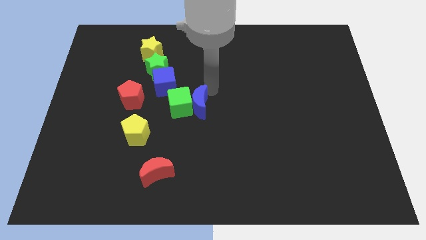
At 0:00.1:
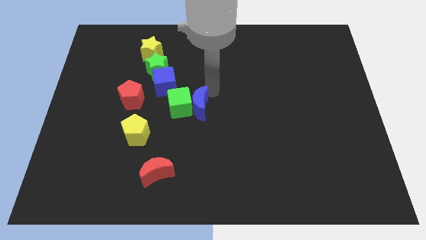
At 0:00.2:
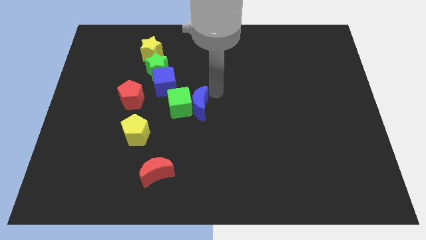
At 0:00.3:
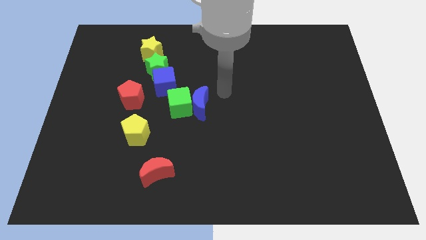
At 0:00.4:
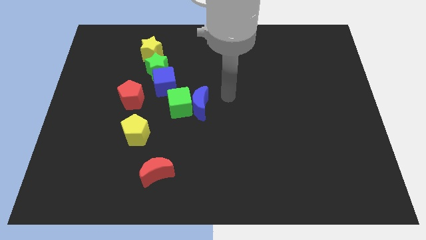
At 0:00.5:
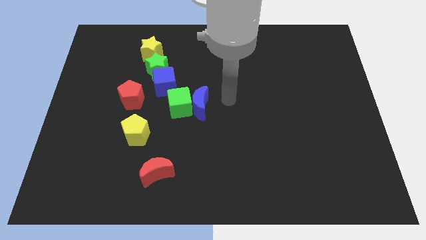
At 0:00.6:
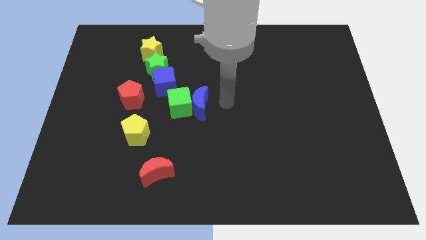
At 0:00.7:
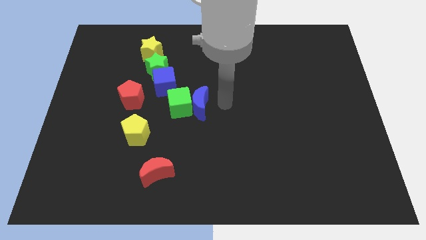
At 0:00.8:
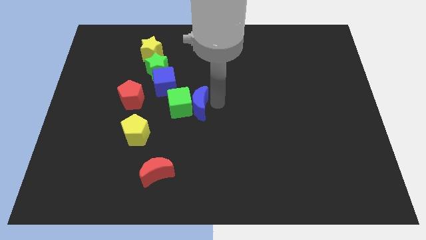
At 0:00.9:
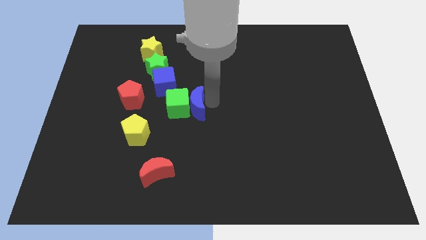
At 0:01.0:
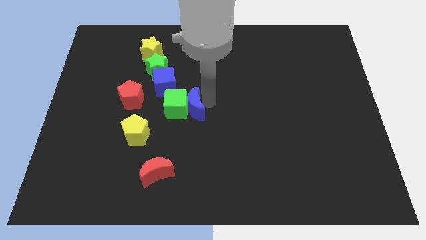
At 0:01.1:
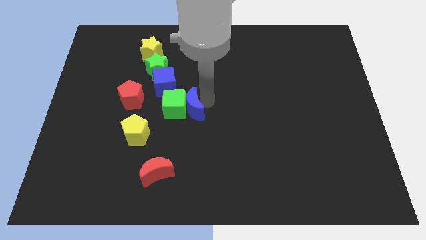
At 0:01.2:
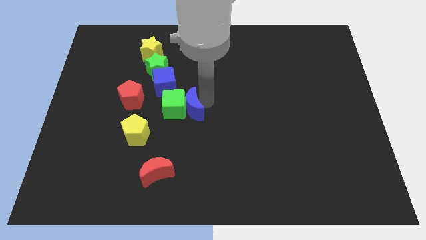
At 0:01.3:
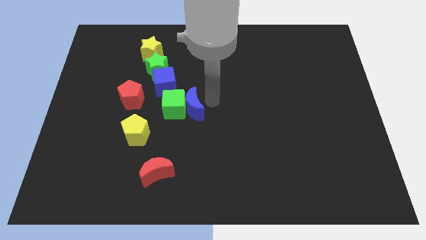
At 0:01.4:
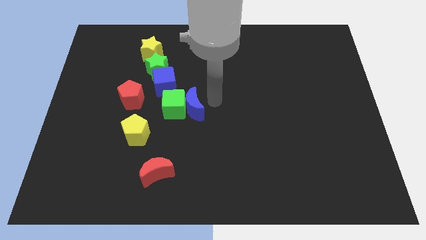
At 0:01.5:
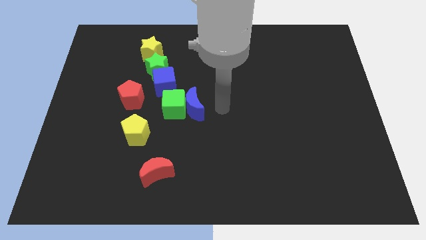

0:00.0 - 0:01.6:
move the blue moon and the green cube slightly to the left

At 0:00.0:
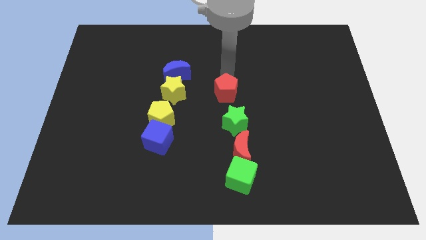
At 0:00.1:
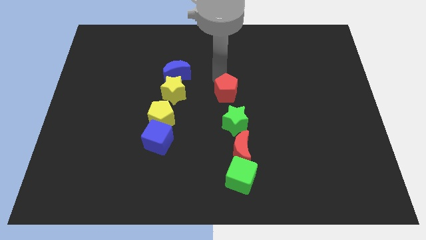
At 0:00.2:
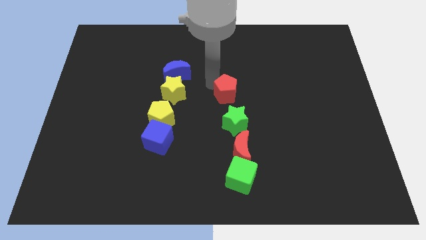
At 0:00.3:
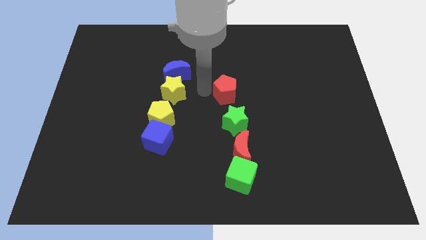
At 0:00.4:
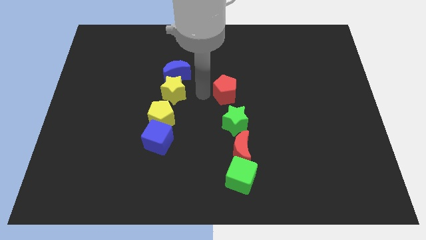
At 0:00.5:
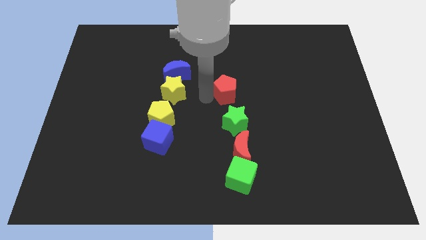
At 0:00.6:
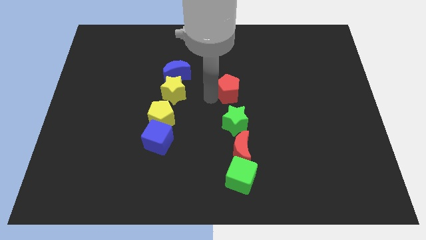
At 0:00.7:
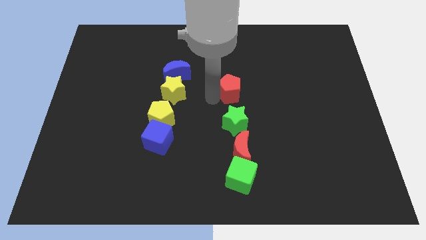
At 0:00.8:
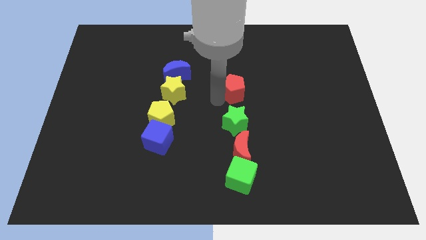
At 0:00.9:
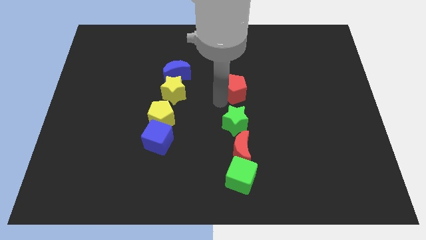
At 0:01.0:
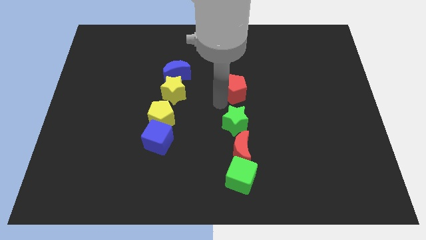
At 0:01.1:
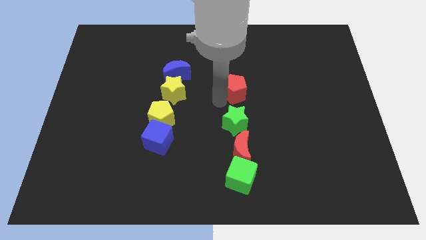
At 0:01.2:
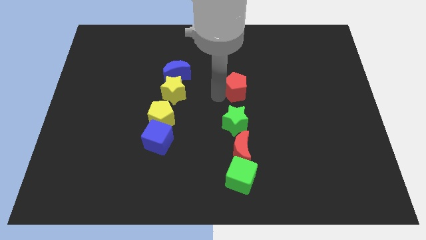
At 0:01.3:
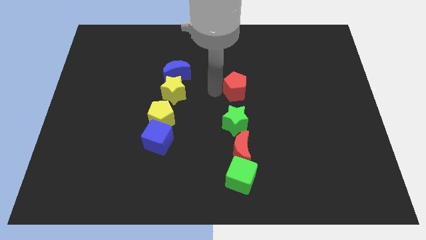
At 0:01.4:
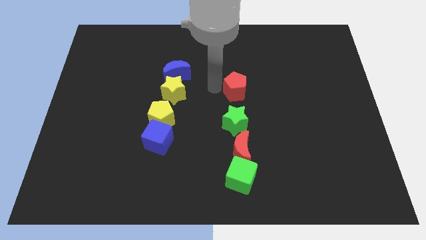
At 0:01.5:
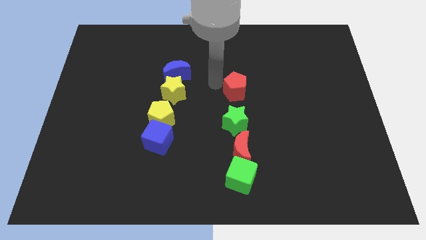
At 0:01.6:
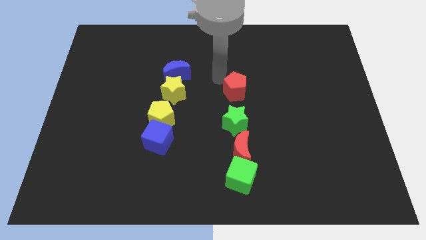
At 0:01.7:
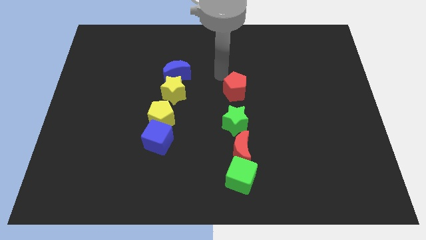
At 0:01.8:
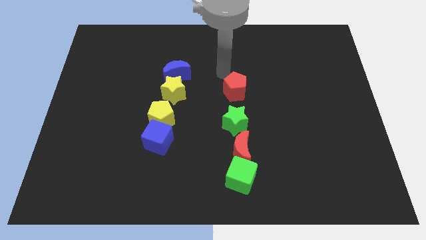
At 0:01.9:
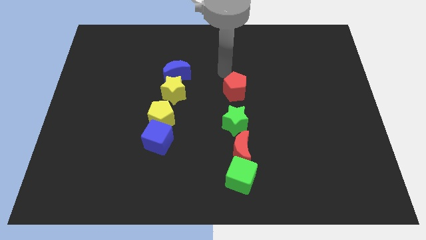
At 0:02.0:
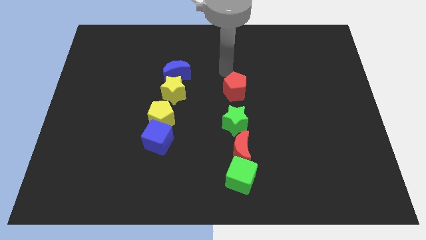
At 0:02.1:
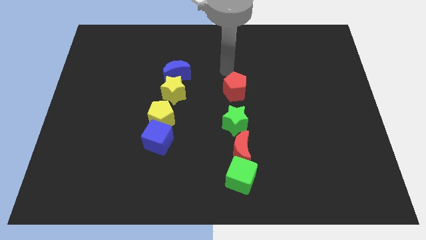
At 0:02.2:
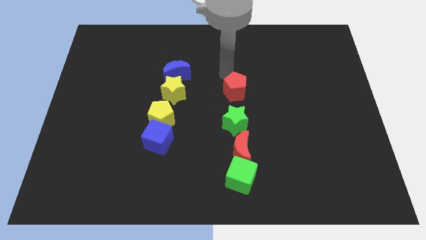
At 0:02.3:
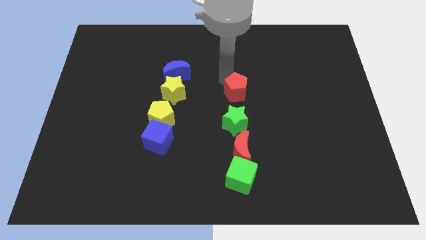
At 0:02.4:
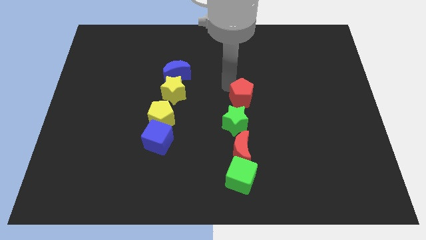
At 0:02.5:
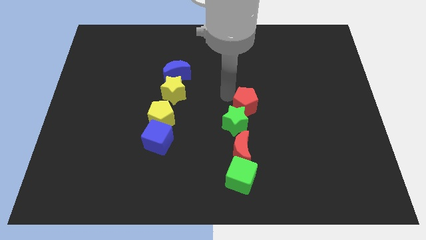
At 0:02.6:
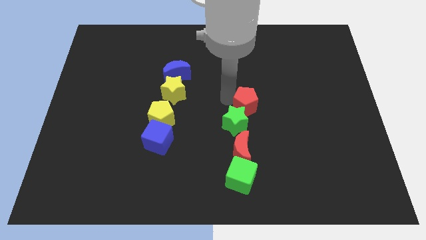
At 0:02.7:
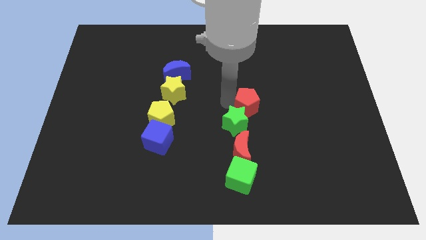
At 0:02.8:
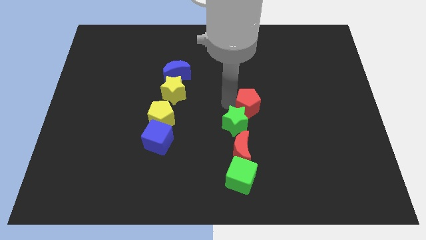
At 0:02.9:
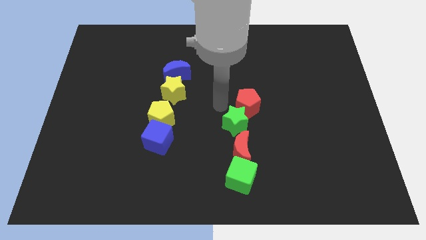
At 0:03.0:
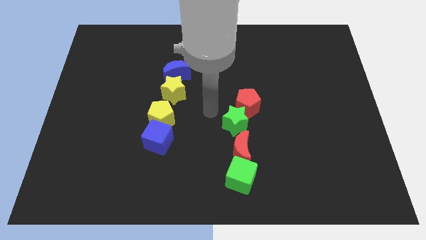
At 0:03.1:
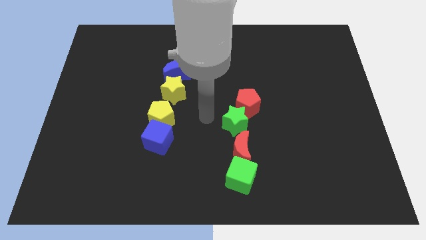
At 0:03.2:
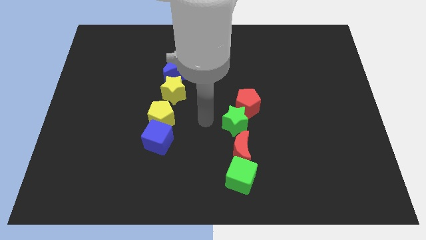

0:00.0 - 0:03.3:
move red pentagon into green star

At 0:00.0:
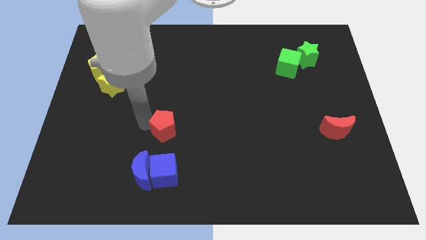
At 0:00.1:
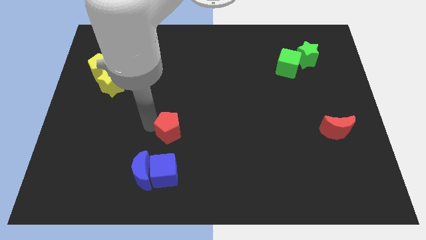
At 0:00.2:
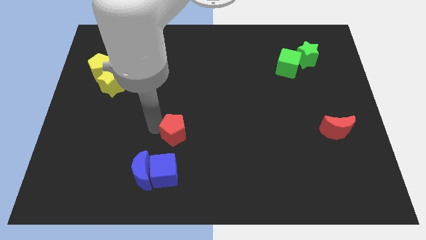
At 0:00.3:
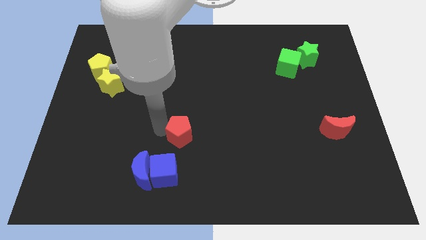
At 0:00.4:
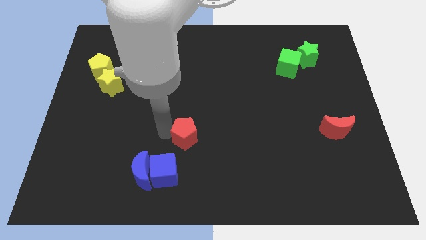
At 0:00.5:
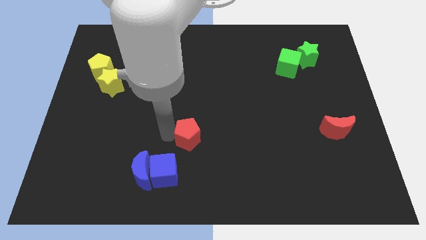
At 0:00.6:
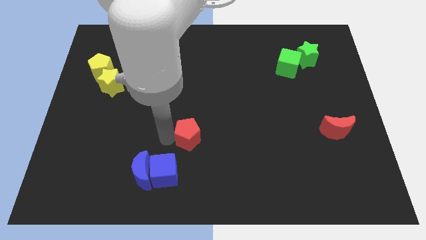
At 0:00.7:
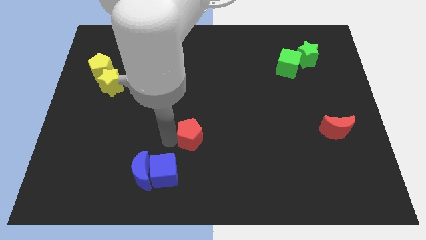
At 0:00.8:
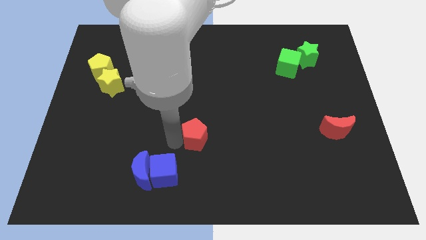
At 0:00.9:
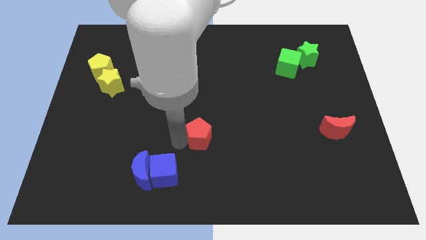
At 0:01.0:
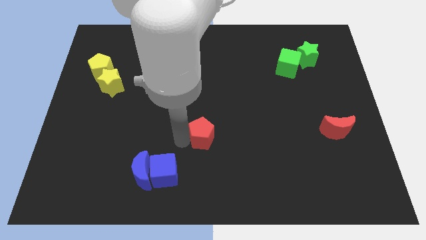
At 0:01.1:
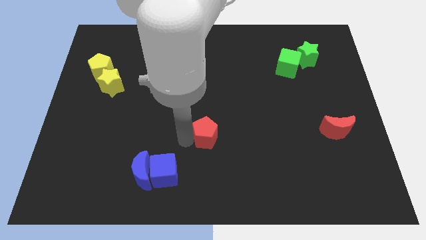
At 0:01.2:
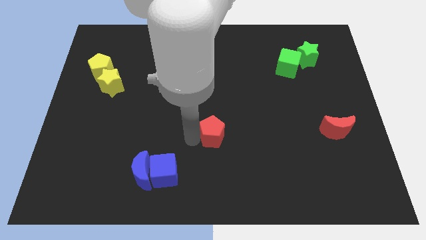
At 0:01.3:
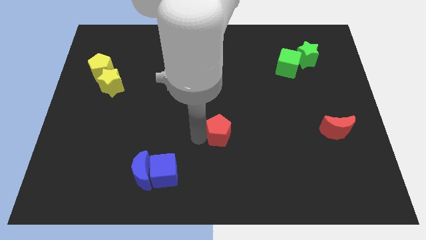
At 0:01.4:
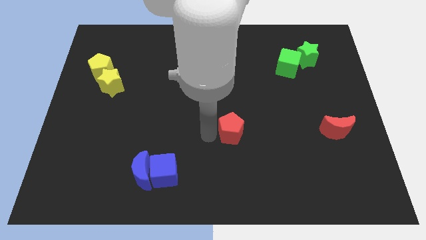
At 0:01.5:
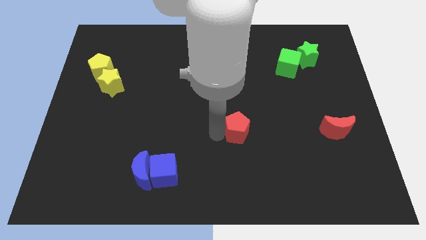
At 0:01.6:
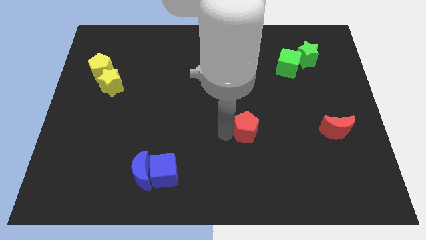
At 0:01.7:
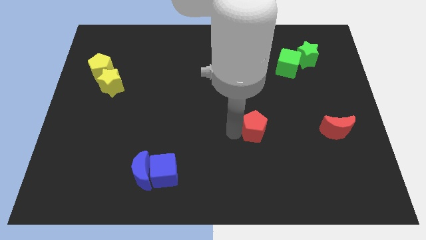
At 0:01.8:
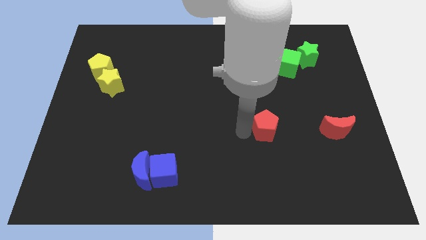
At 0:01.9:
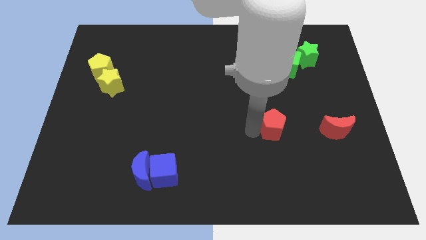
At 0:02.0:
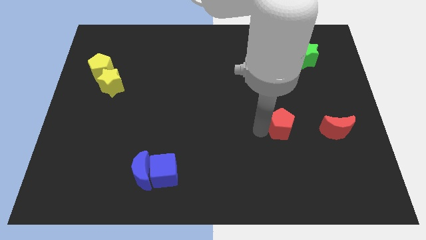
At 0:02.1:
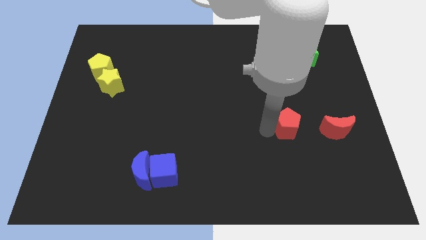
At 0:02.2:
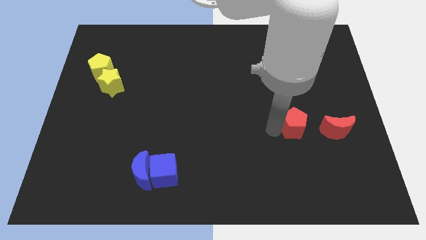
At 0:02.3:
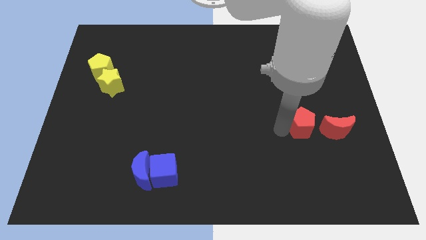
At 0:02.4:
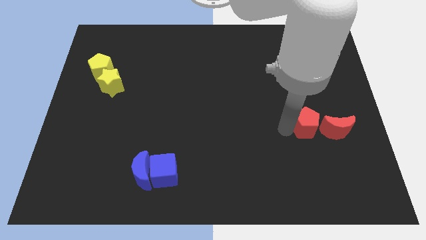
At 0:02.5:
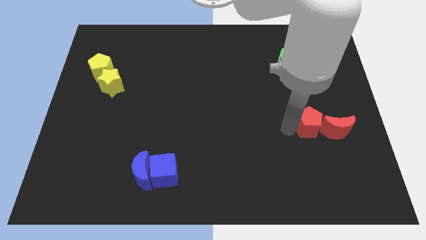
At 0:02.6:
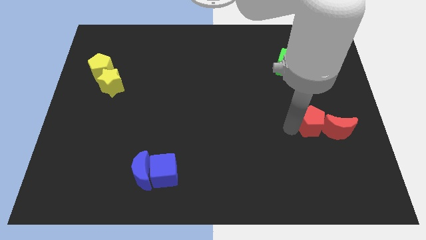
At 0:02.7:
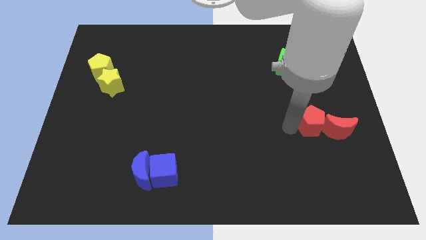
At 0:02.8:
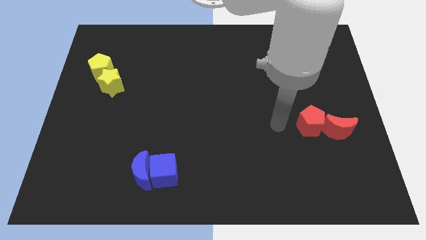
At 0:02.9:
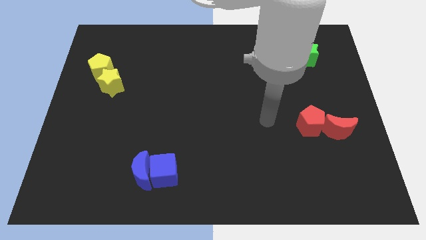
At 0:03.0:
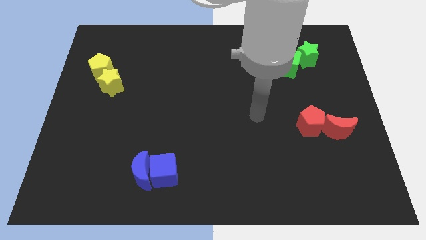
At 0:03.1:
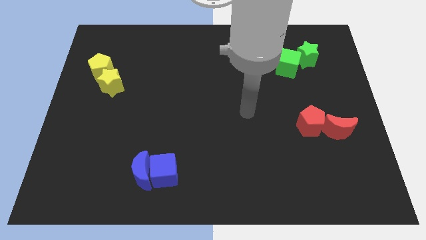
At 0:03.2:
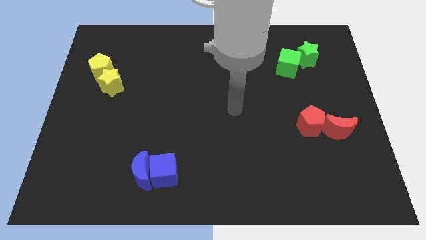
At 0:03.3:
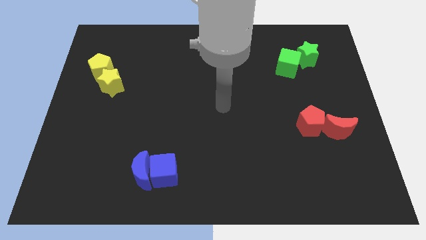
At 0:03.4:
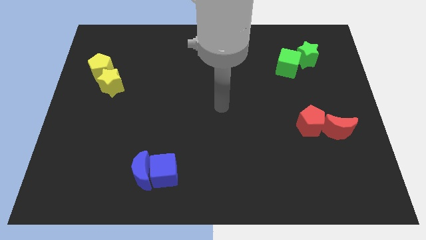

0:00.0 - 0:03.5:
push the red pentagon close to the red crescent

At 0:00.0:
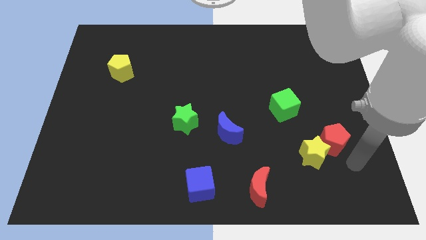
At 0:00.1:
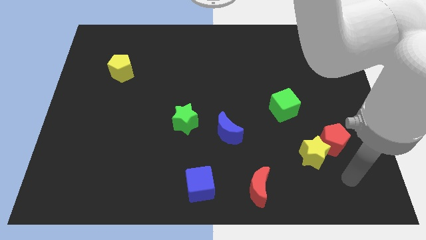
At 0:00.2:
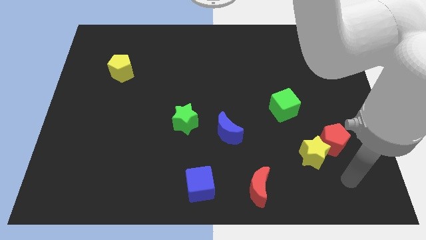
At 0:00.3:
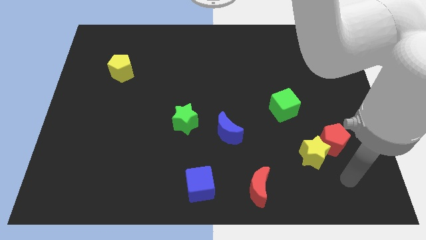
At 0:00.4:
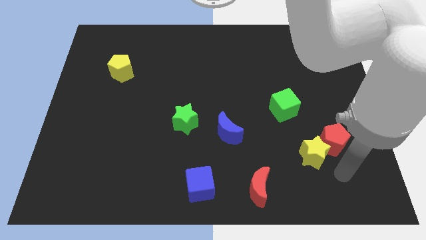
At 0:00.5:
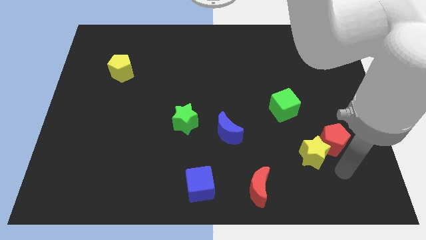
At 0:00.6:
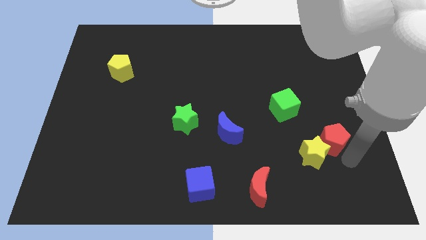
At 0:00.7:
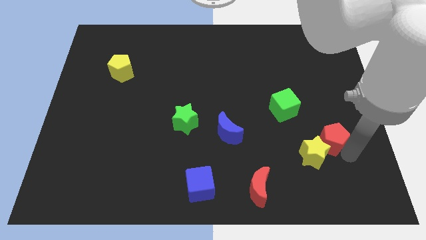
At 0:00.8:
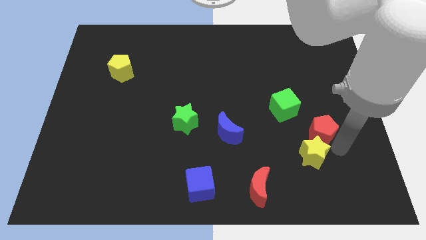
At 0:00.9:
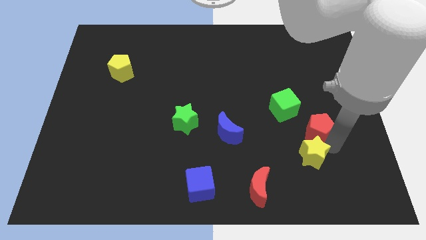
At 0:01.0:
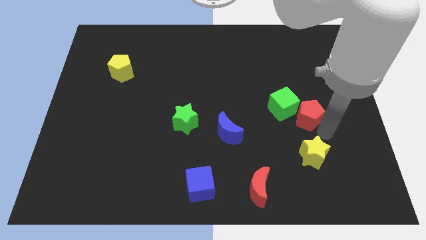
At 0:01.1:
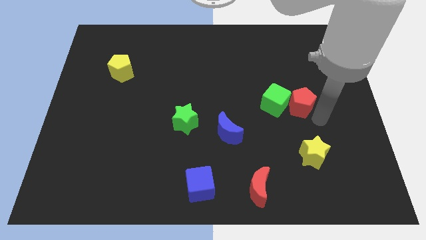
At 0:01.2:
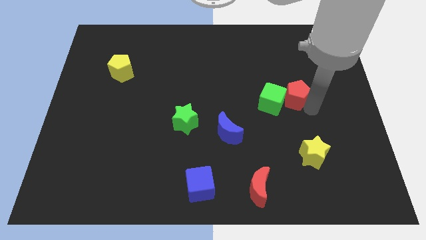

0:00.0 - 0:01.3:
put the red pentagon into the green cube
